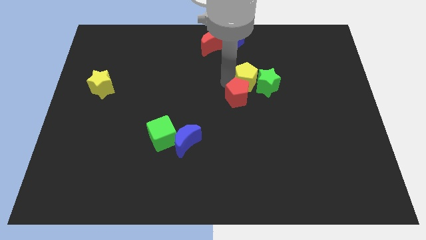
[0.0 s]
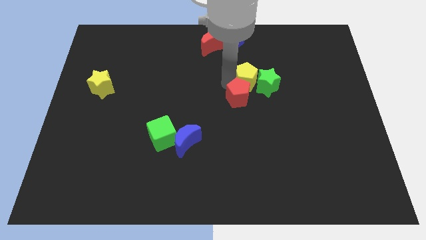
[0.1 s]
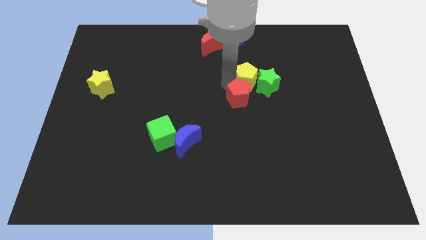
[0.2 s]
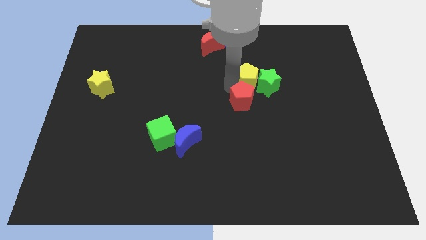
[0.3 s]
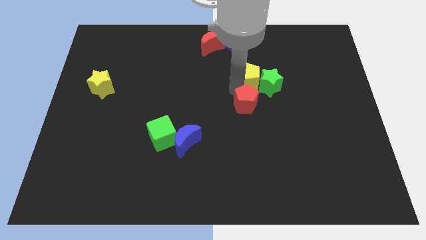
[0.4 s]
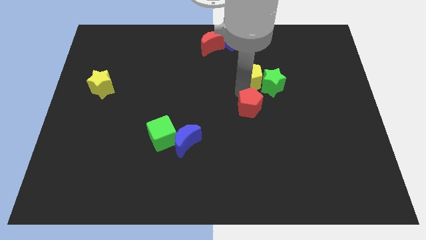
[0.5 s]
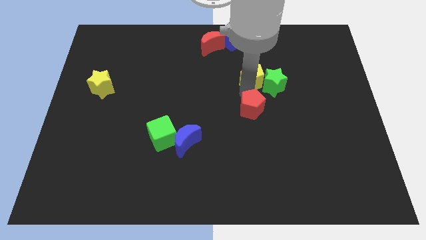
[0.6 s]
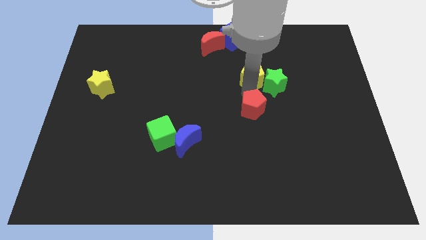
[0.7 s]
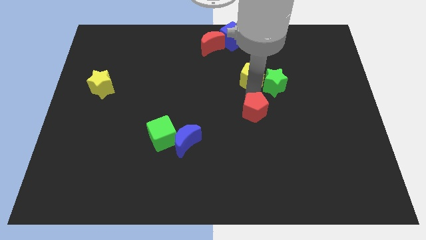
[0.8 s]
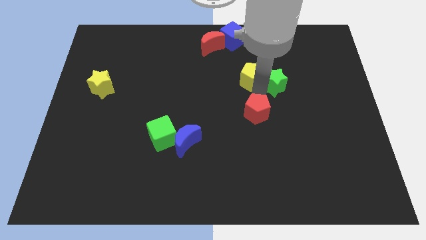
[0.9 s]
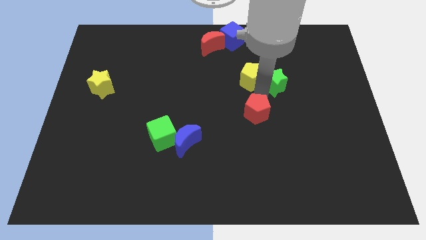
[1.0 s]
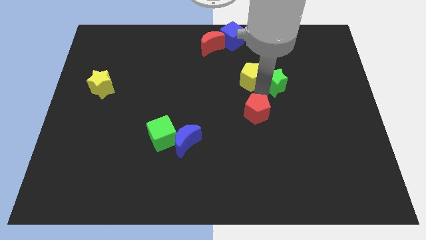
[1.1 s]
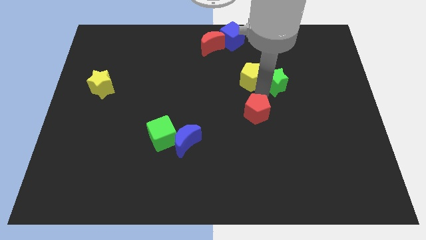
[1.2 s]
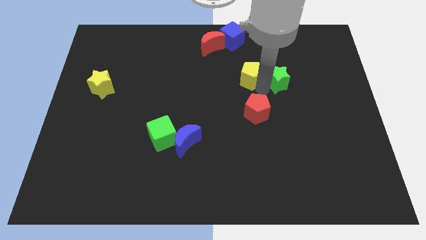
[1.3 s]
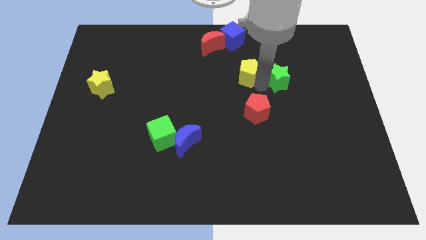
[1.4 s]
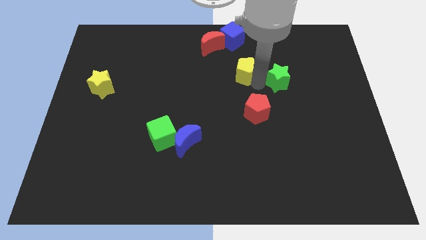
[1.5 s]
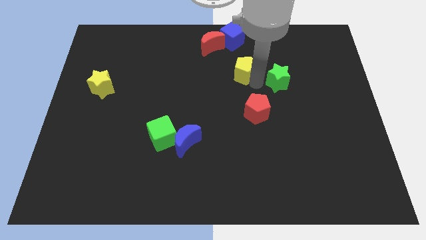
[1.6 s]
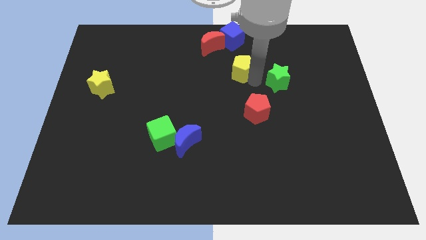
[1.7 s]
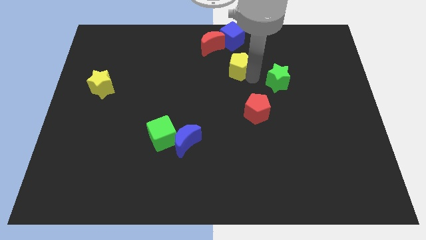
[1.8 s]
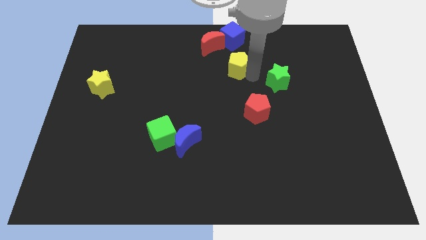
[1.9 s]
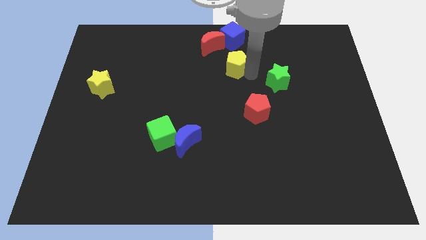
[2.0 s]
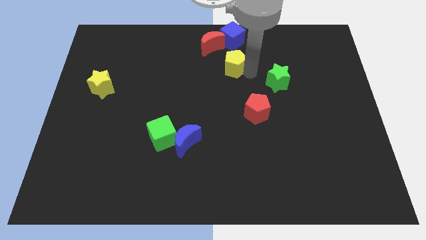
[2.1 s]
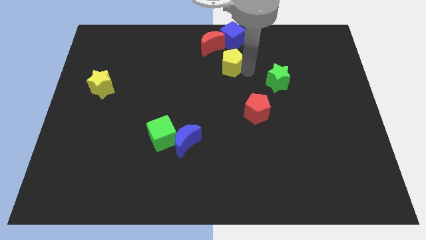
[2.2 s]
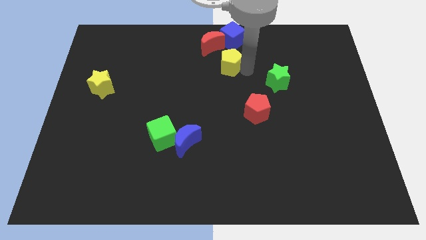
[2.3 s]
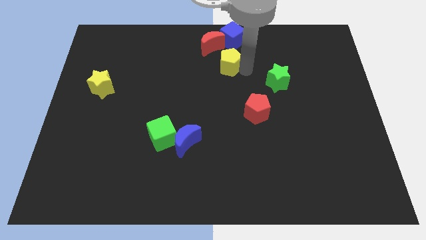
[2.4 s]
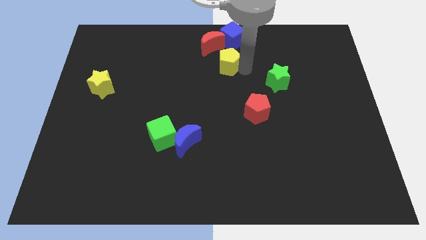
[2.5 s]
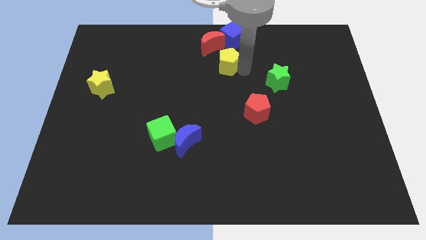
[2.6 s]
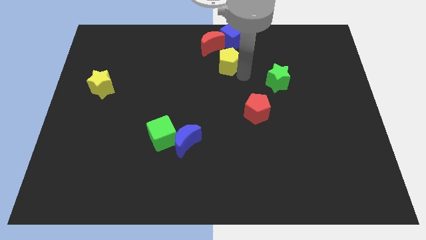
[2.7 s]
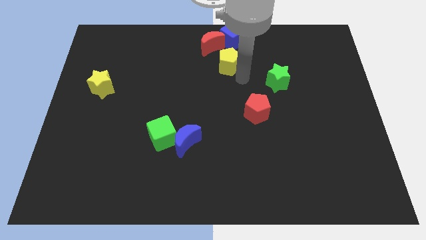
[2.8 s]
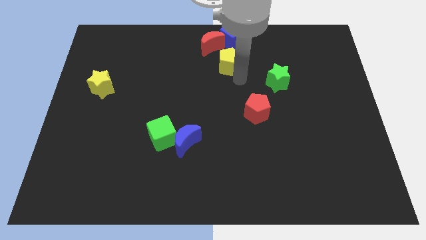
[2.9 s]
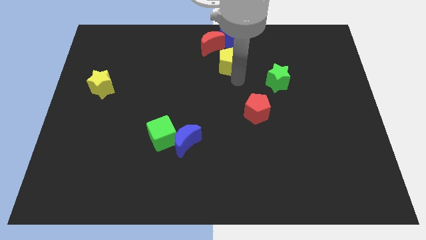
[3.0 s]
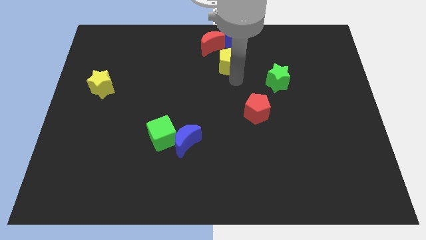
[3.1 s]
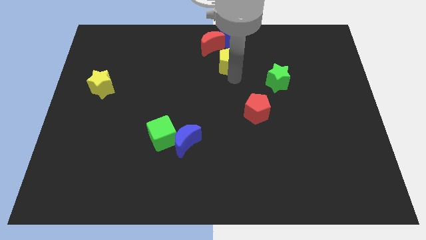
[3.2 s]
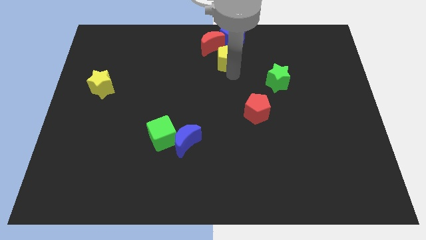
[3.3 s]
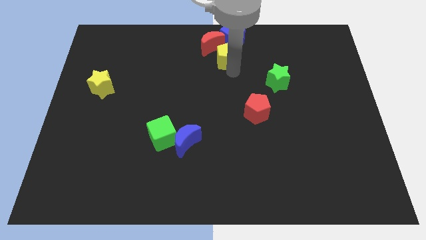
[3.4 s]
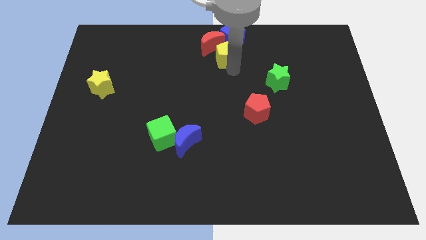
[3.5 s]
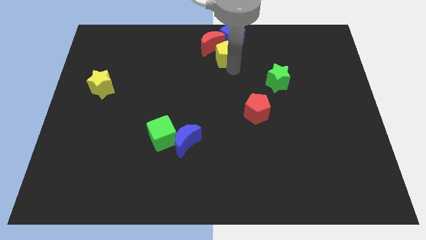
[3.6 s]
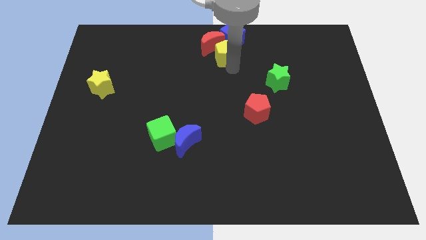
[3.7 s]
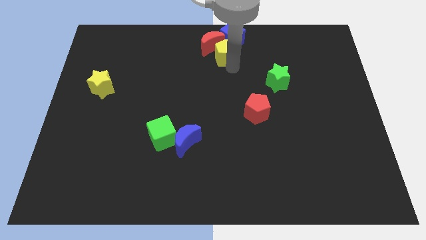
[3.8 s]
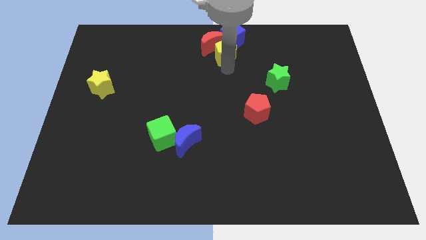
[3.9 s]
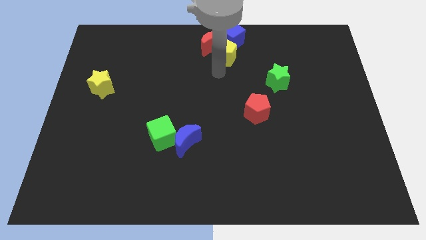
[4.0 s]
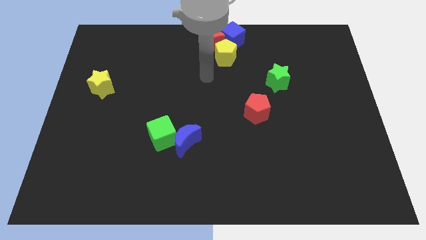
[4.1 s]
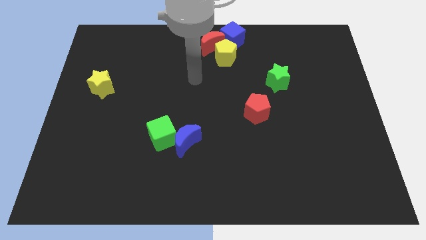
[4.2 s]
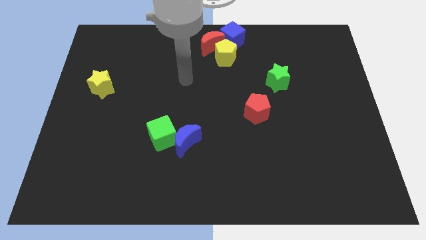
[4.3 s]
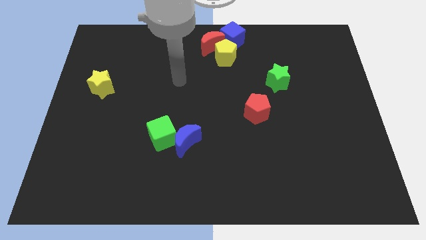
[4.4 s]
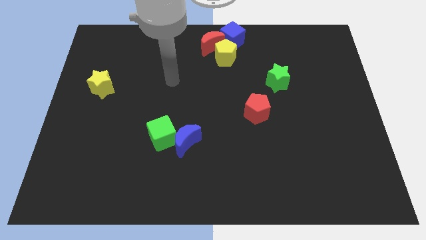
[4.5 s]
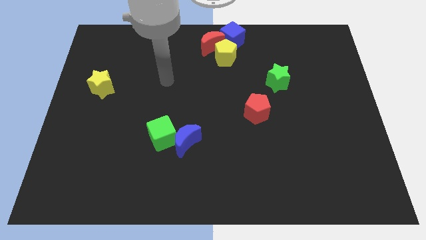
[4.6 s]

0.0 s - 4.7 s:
move the yellow pentagon towards the top center of the board

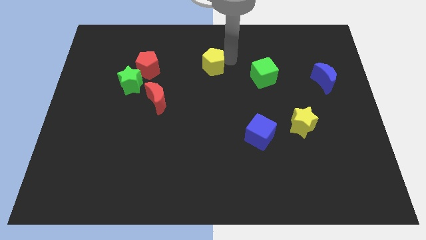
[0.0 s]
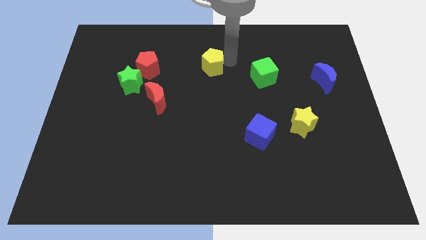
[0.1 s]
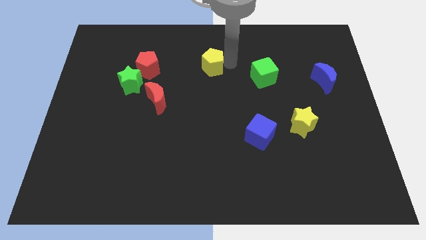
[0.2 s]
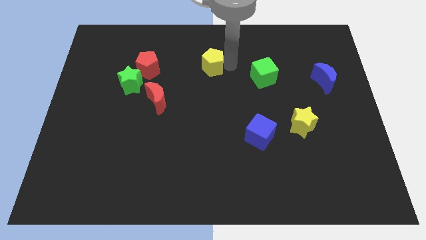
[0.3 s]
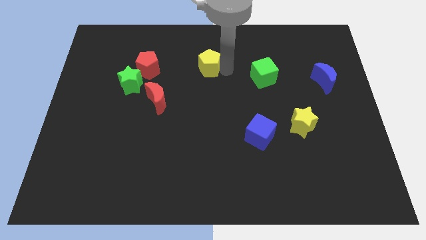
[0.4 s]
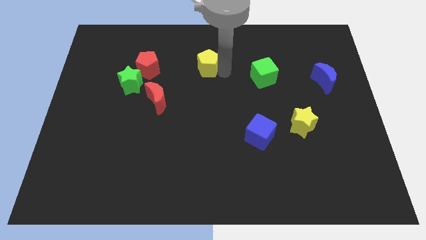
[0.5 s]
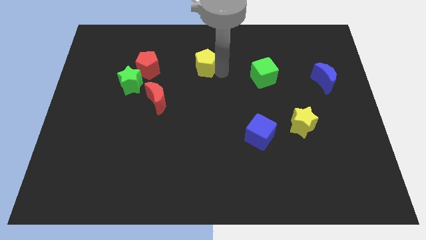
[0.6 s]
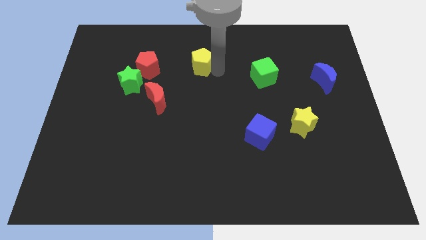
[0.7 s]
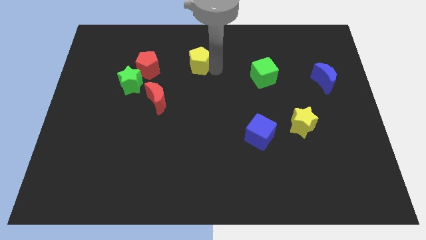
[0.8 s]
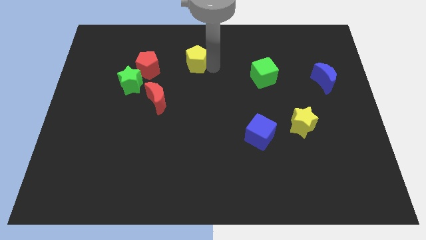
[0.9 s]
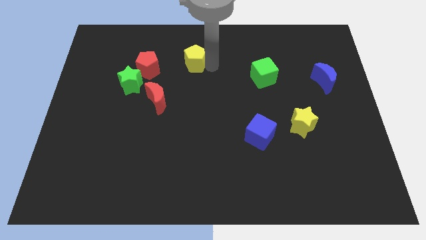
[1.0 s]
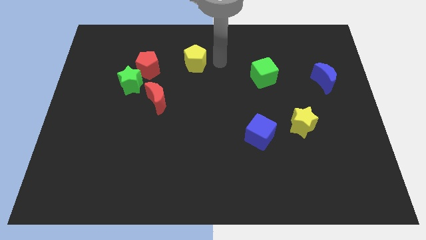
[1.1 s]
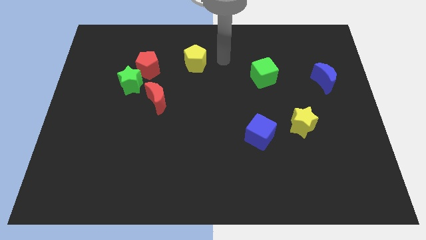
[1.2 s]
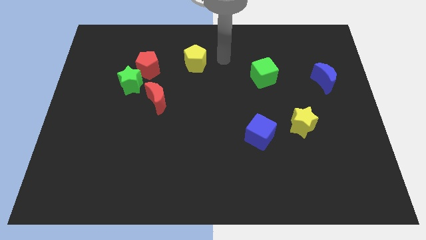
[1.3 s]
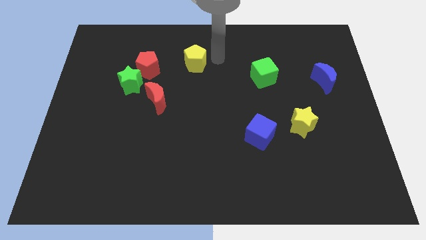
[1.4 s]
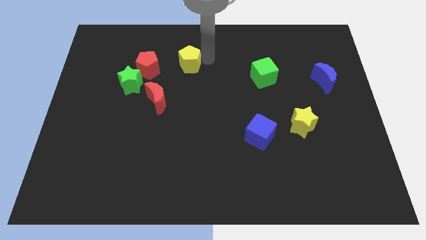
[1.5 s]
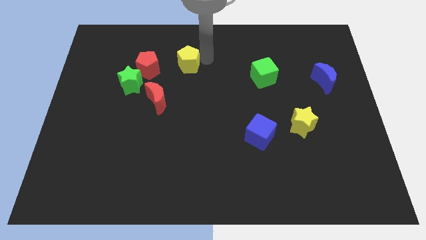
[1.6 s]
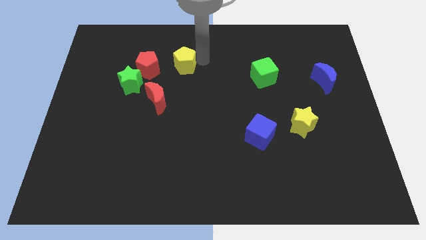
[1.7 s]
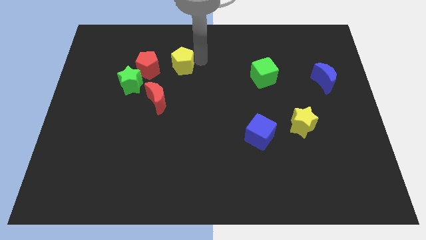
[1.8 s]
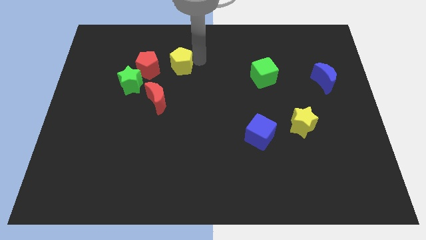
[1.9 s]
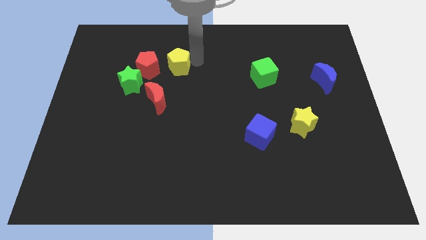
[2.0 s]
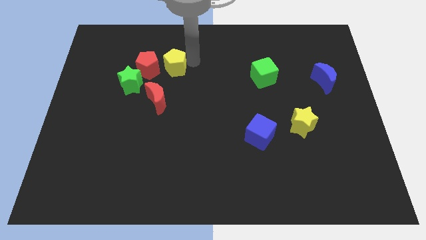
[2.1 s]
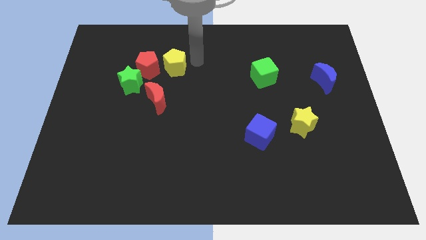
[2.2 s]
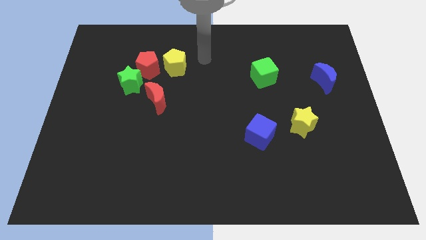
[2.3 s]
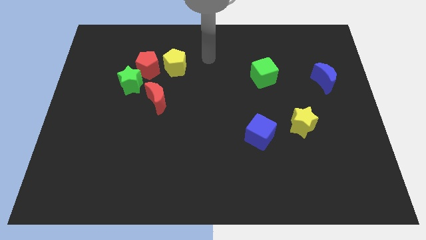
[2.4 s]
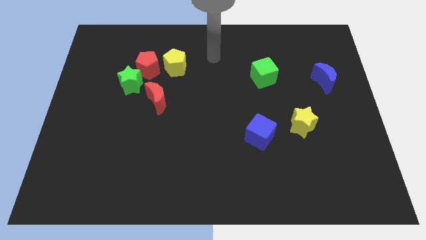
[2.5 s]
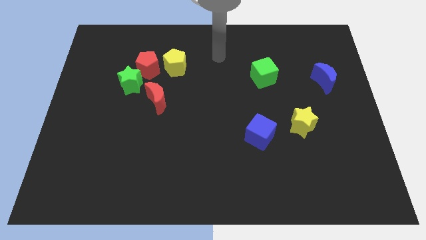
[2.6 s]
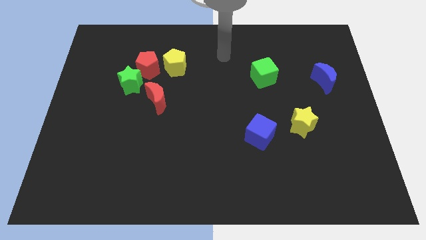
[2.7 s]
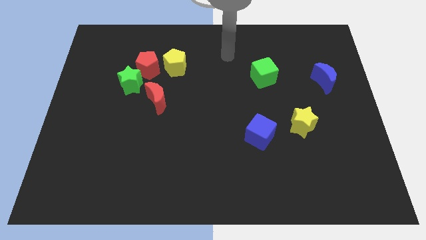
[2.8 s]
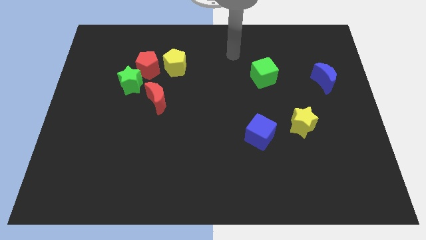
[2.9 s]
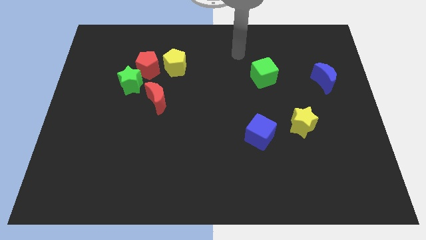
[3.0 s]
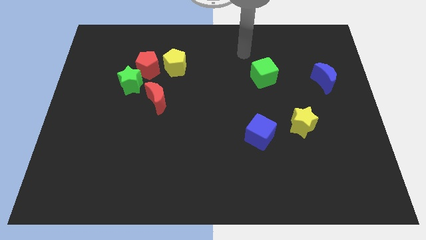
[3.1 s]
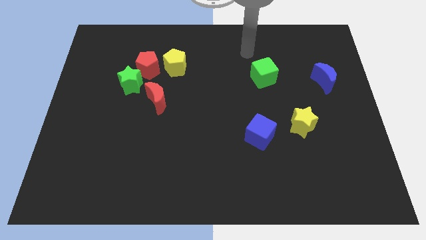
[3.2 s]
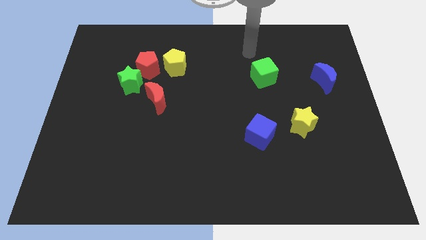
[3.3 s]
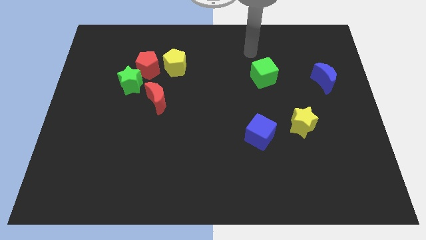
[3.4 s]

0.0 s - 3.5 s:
place the yellow pentagon right to the red pentagon

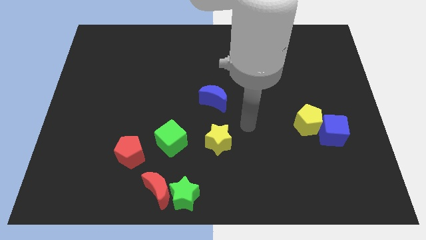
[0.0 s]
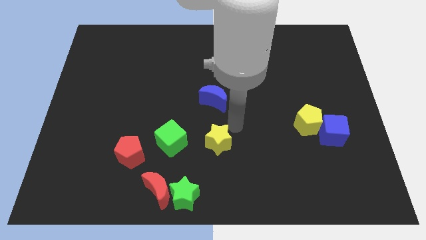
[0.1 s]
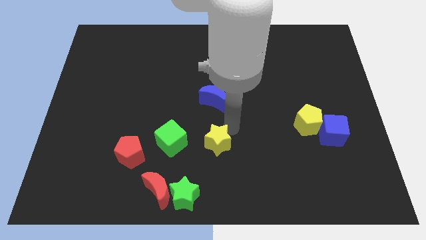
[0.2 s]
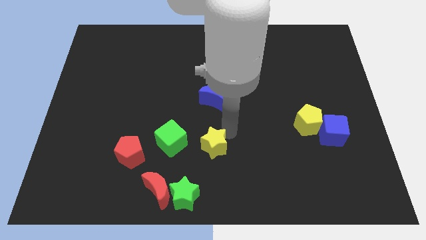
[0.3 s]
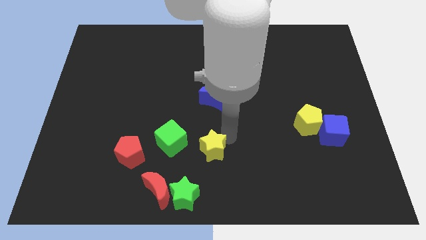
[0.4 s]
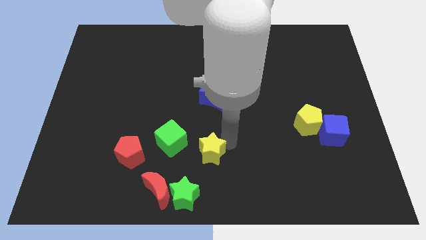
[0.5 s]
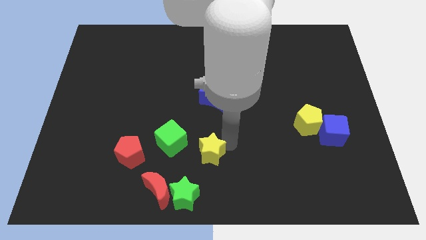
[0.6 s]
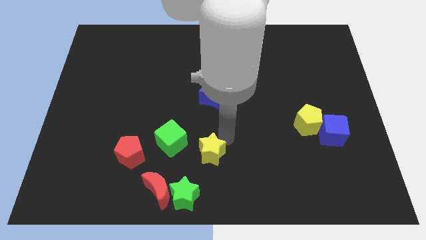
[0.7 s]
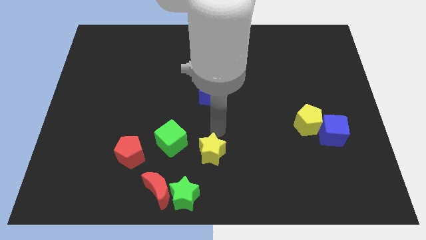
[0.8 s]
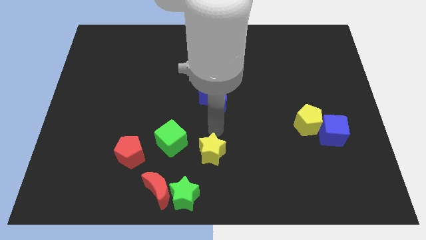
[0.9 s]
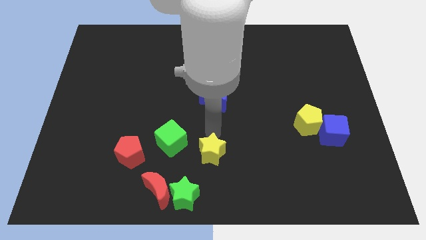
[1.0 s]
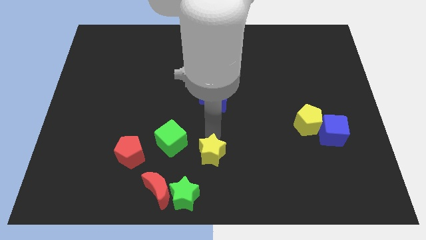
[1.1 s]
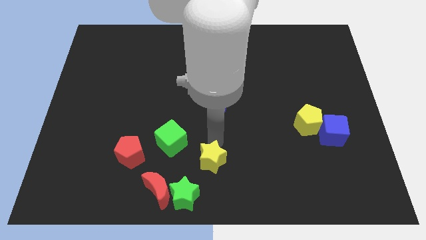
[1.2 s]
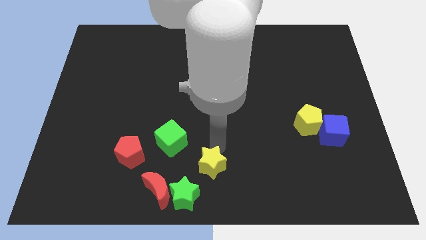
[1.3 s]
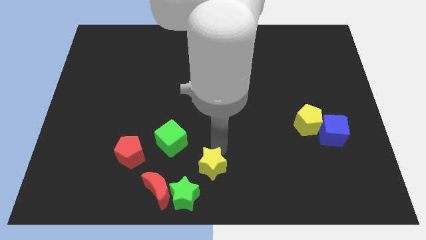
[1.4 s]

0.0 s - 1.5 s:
place yellow star diagonal to the green star
